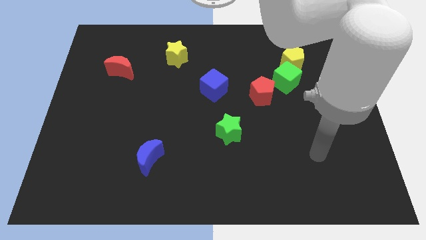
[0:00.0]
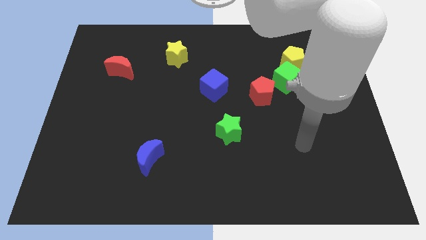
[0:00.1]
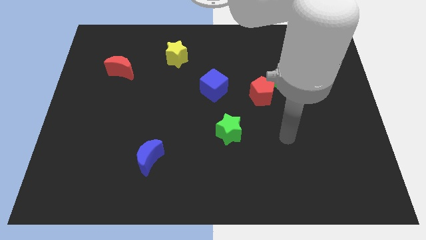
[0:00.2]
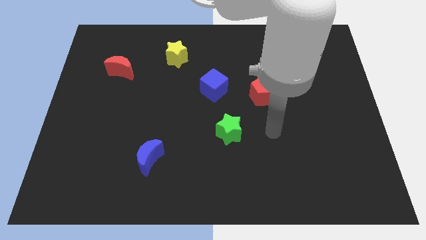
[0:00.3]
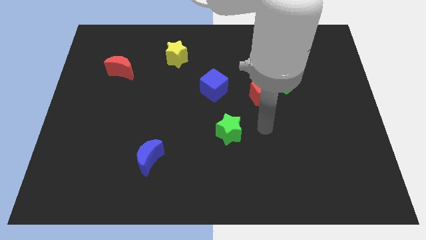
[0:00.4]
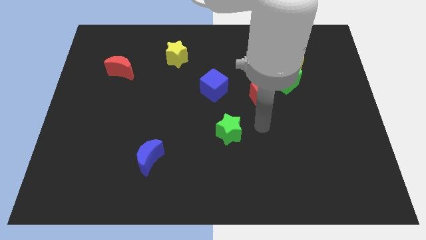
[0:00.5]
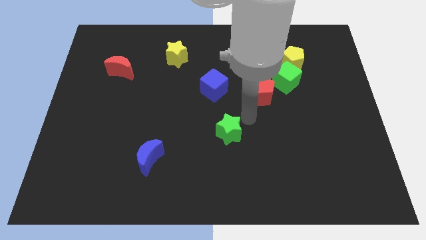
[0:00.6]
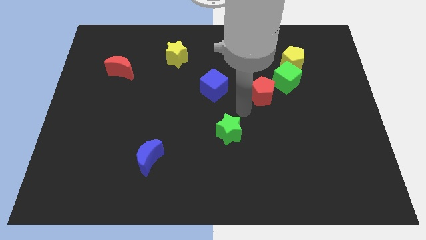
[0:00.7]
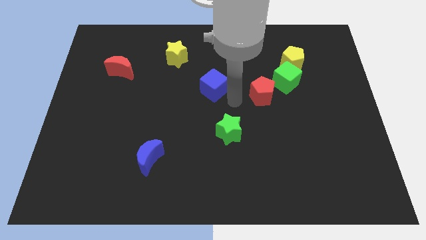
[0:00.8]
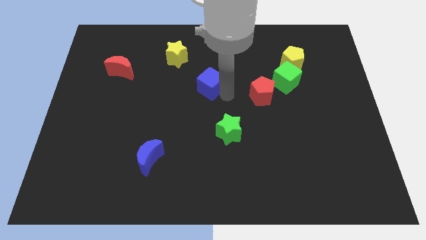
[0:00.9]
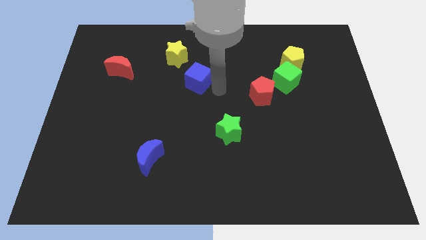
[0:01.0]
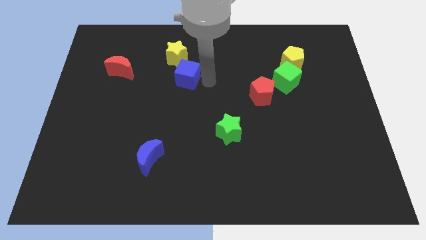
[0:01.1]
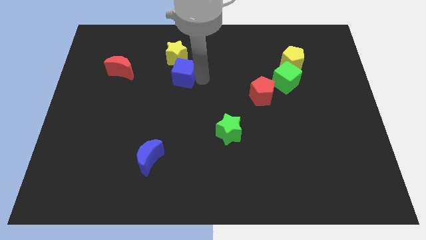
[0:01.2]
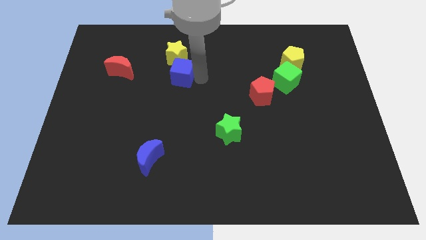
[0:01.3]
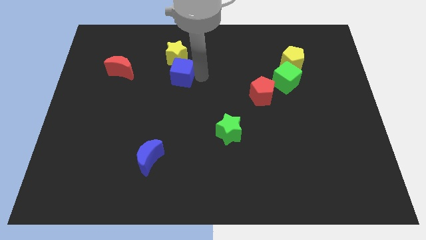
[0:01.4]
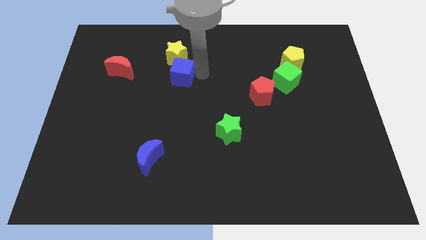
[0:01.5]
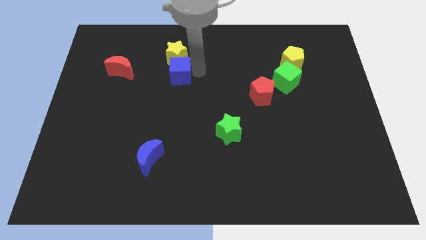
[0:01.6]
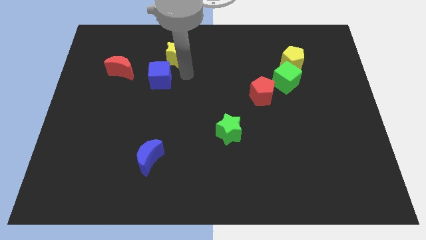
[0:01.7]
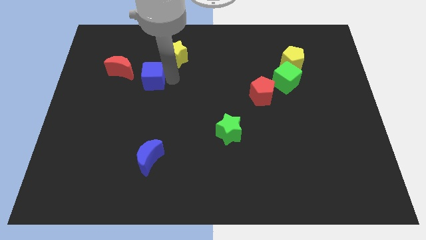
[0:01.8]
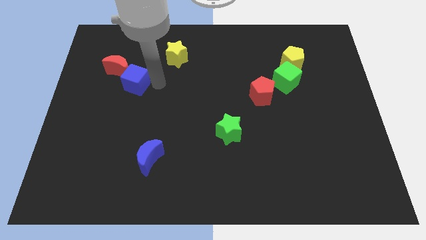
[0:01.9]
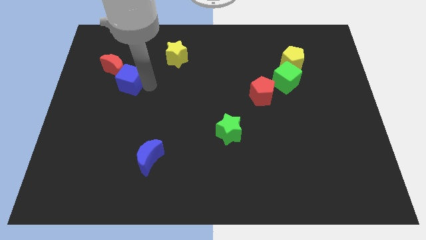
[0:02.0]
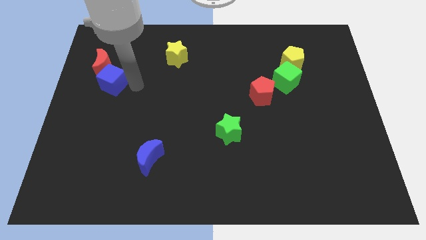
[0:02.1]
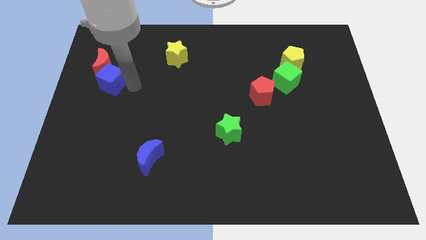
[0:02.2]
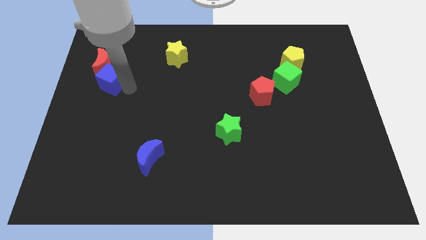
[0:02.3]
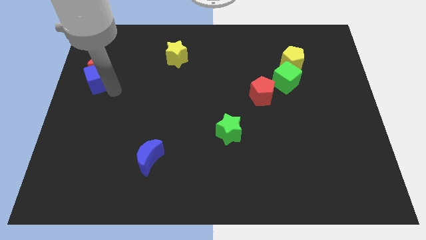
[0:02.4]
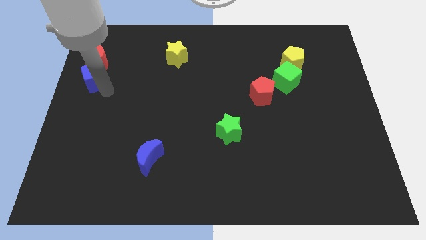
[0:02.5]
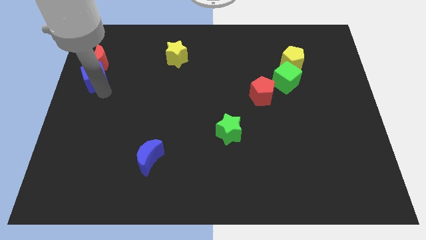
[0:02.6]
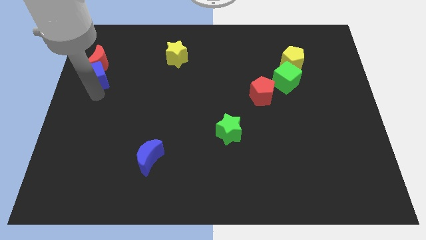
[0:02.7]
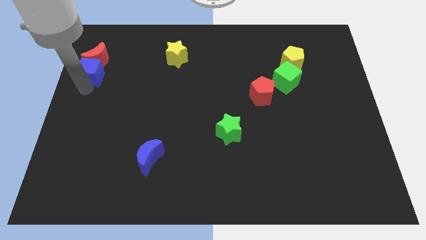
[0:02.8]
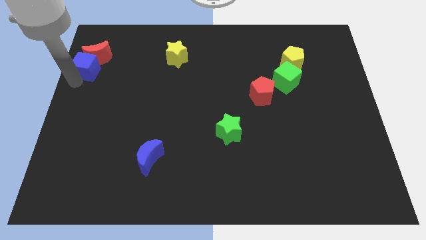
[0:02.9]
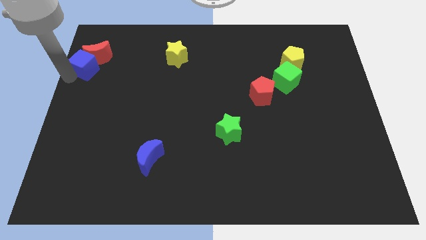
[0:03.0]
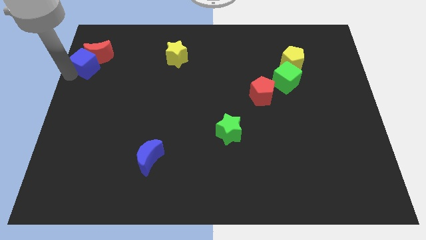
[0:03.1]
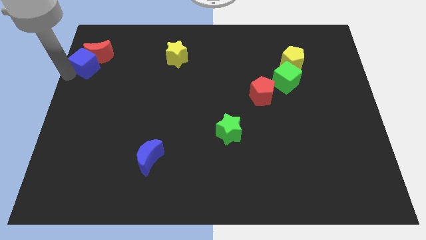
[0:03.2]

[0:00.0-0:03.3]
push the blue cube and red moon to the top left corner

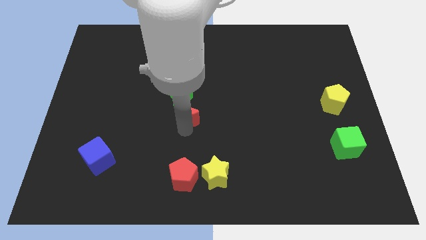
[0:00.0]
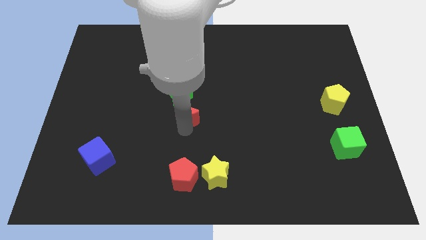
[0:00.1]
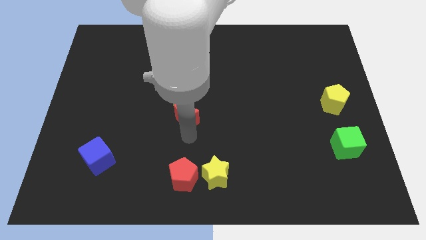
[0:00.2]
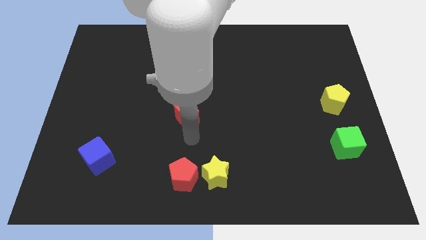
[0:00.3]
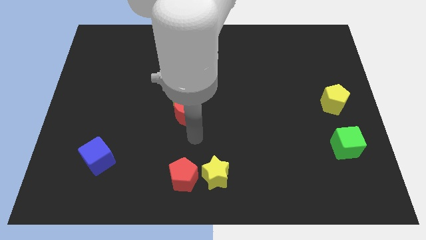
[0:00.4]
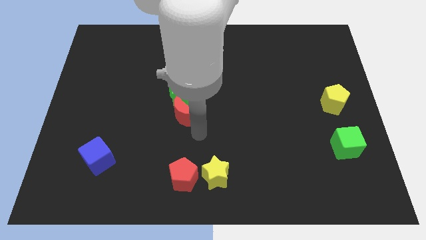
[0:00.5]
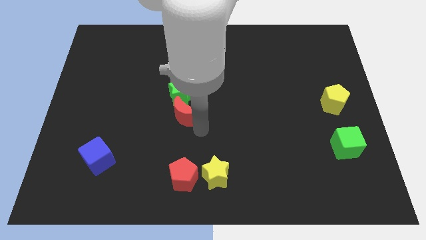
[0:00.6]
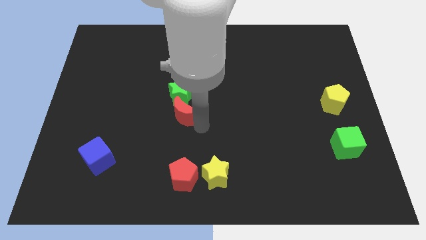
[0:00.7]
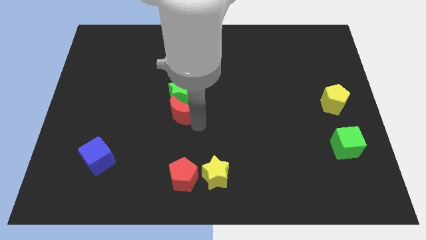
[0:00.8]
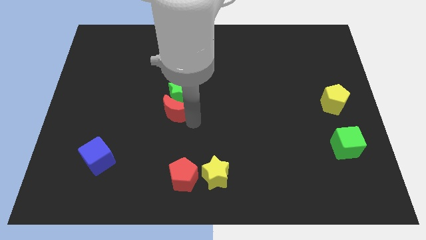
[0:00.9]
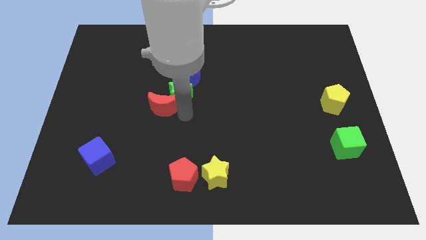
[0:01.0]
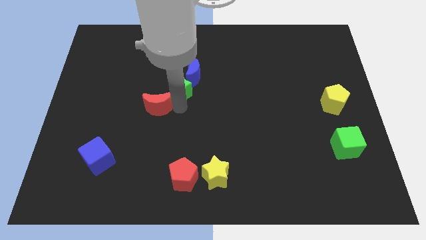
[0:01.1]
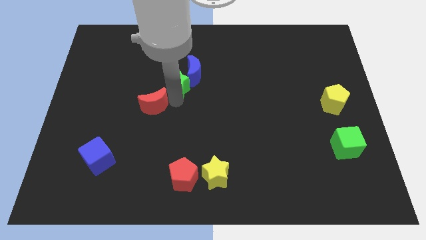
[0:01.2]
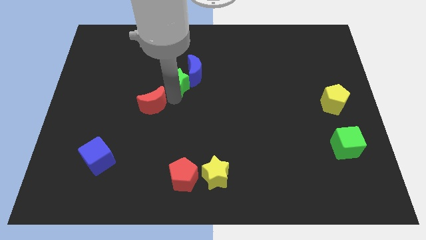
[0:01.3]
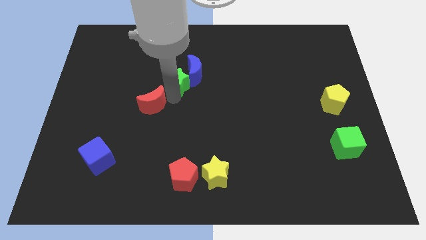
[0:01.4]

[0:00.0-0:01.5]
move red crescent left to green star

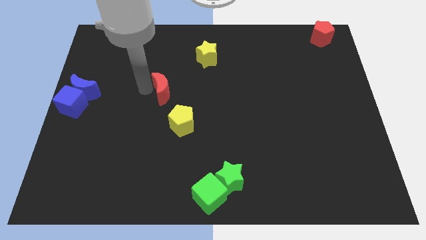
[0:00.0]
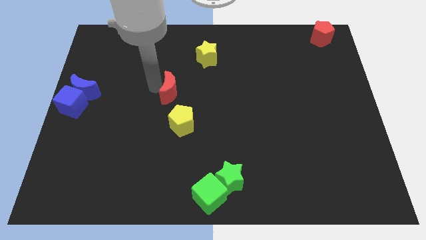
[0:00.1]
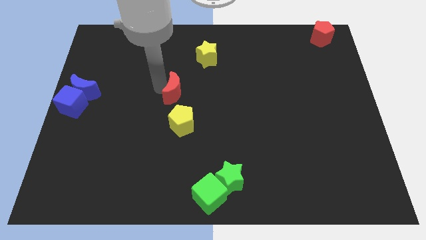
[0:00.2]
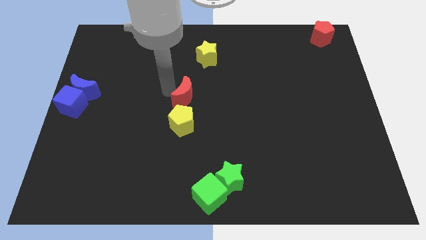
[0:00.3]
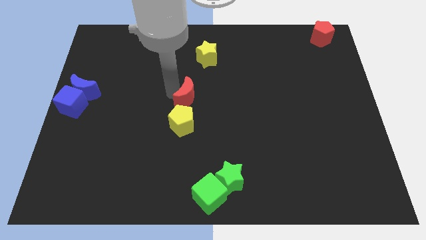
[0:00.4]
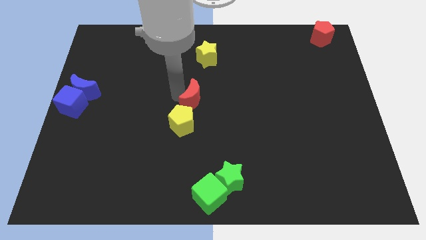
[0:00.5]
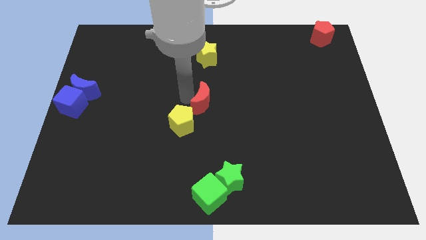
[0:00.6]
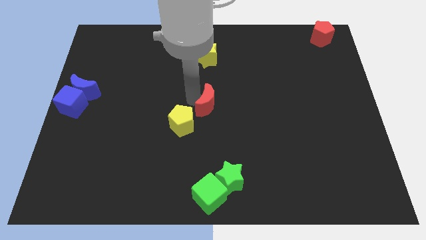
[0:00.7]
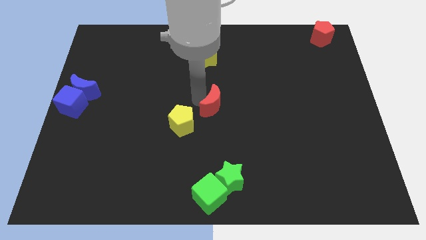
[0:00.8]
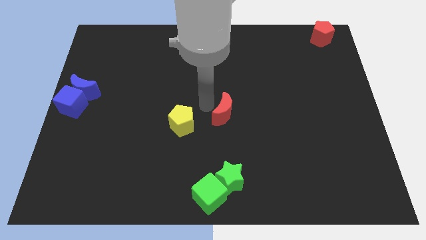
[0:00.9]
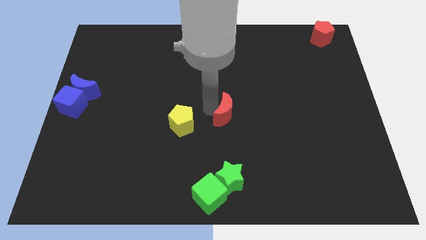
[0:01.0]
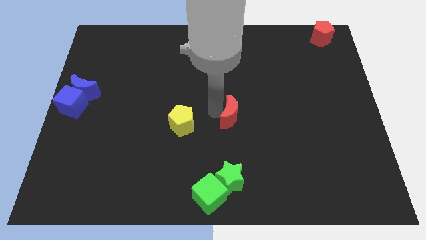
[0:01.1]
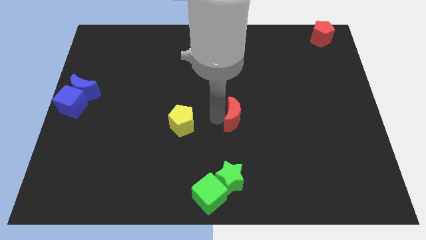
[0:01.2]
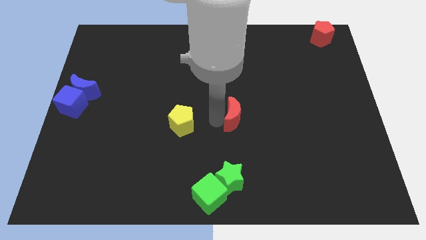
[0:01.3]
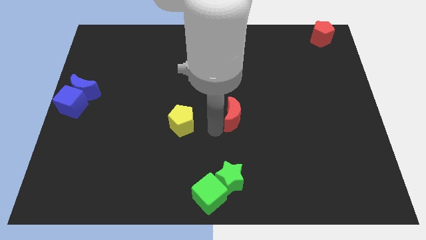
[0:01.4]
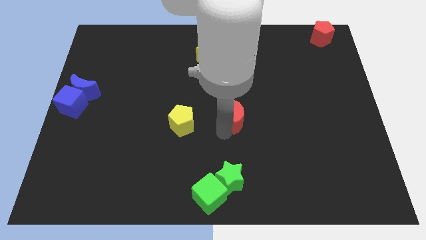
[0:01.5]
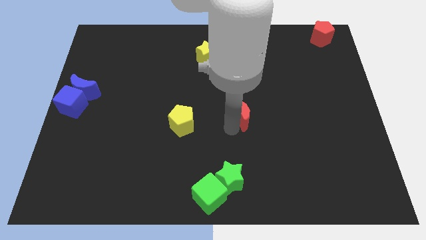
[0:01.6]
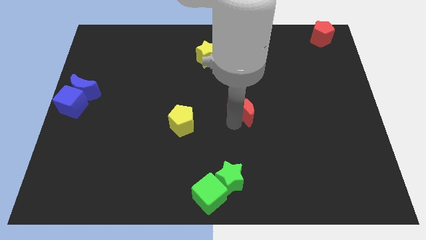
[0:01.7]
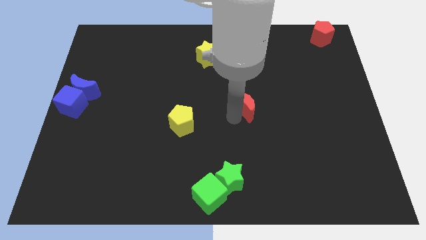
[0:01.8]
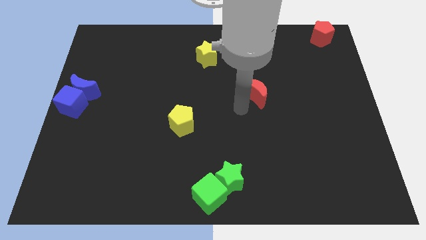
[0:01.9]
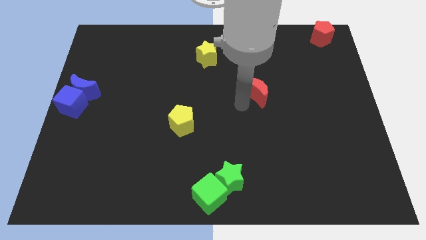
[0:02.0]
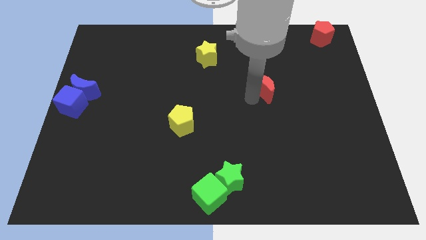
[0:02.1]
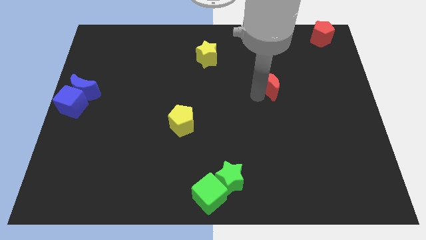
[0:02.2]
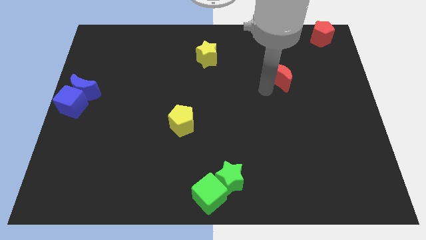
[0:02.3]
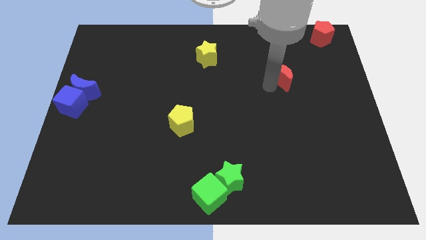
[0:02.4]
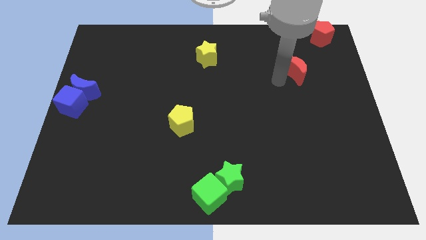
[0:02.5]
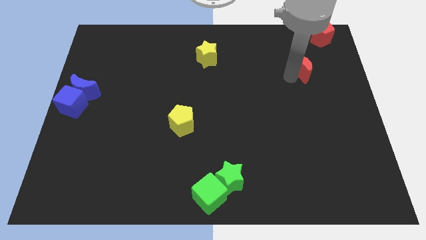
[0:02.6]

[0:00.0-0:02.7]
place the red crescent diagonally left to the red pentagon

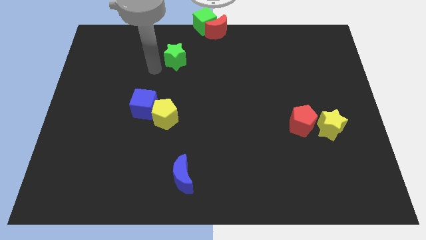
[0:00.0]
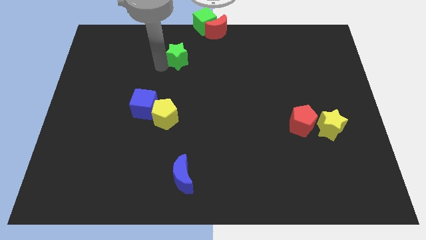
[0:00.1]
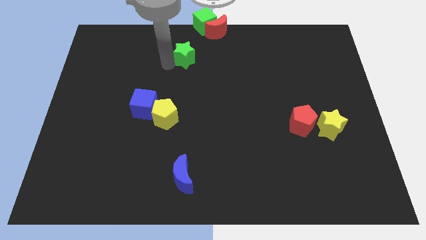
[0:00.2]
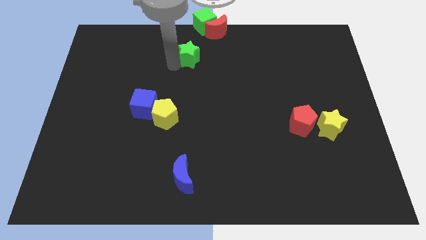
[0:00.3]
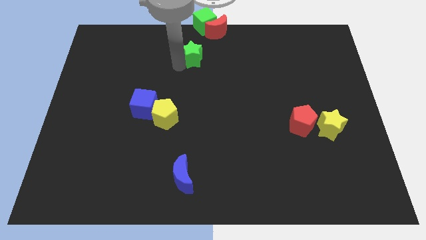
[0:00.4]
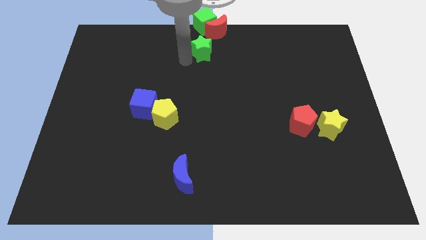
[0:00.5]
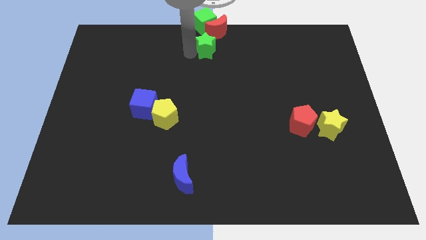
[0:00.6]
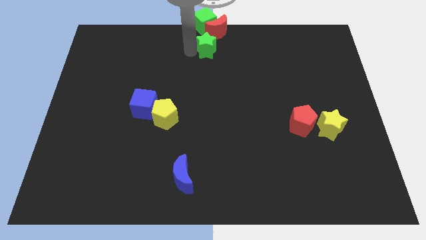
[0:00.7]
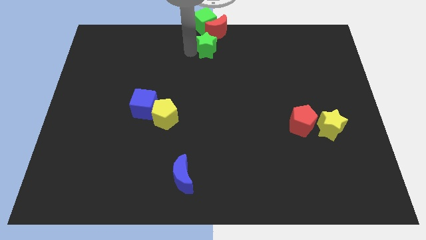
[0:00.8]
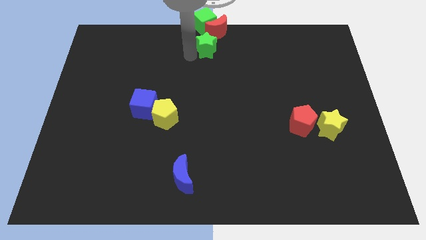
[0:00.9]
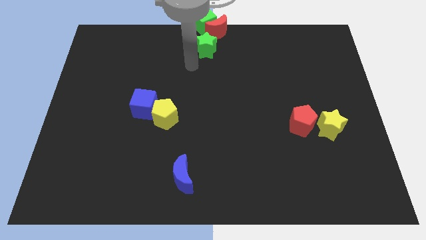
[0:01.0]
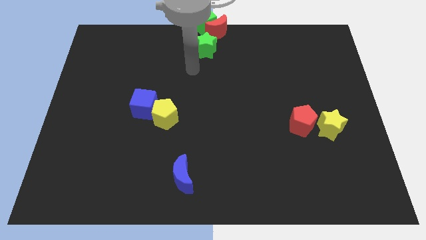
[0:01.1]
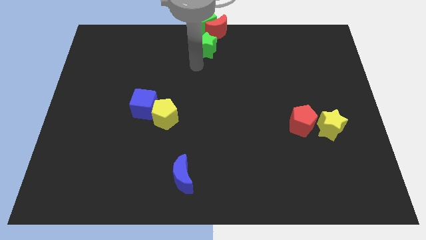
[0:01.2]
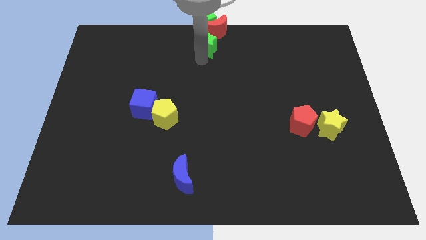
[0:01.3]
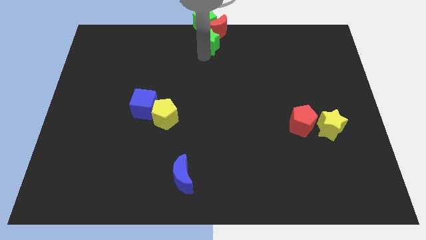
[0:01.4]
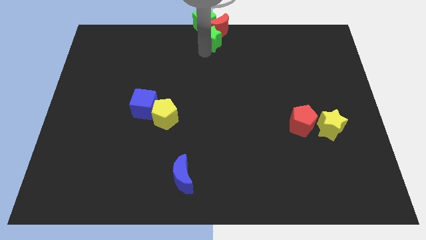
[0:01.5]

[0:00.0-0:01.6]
push the green star into the red moon
